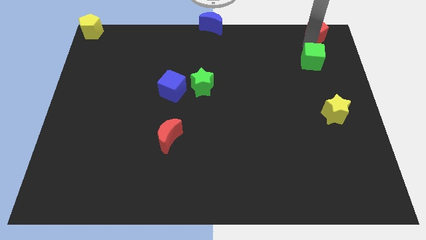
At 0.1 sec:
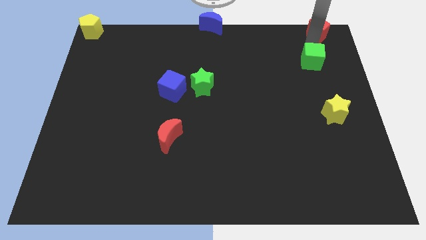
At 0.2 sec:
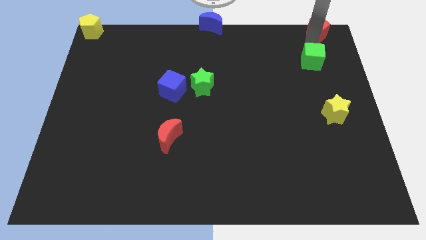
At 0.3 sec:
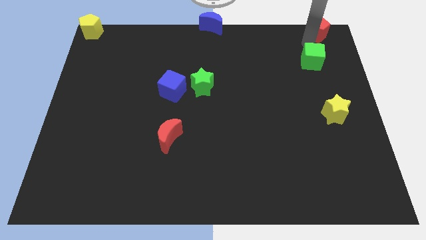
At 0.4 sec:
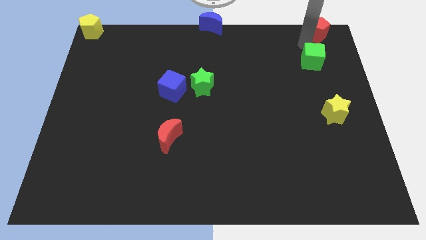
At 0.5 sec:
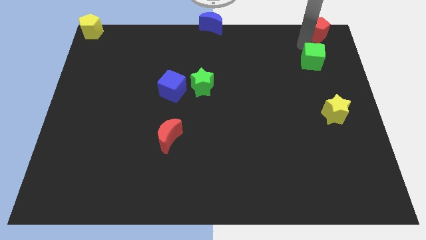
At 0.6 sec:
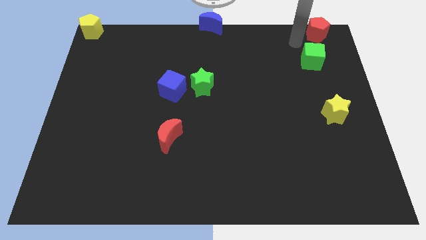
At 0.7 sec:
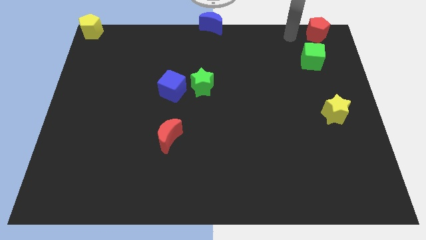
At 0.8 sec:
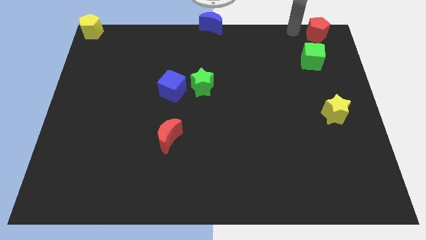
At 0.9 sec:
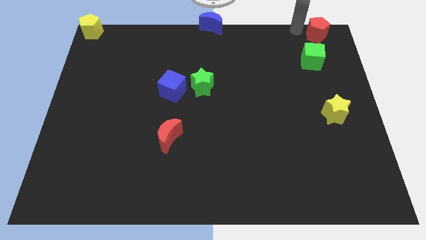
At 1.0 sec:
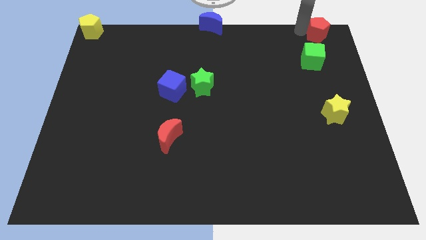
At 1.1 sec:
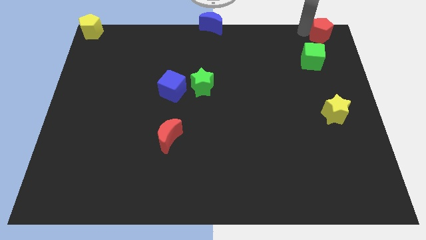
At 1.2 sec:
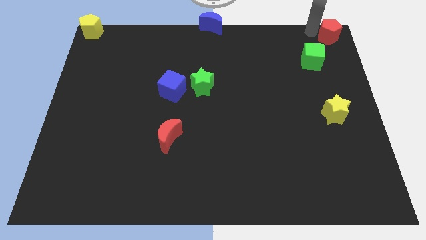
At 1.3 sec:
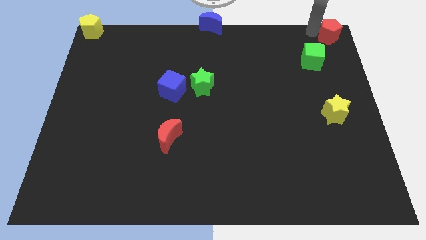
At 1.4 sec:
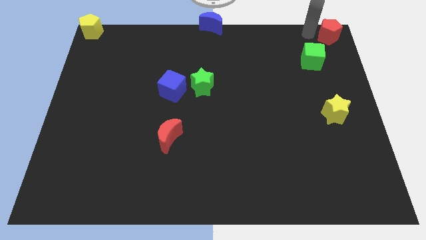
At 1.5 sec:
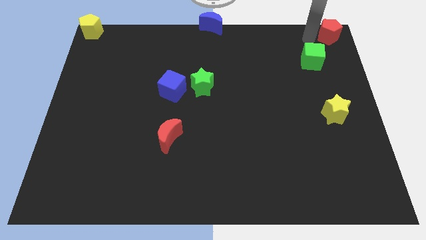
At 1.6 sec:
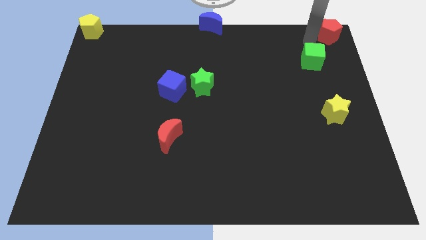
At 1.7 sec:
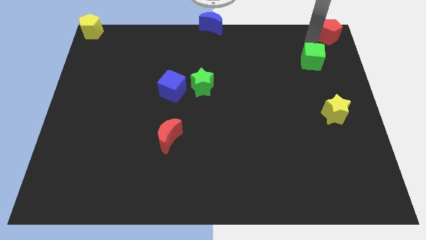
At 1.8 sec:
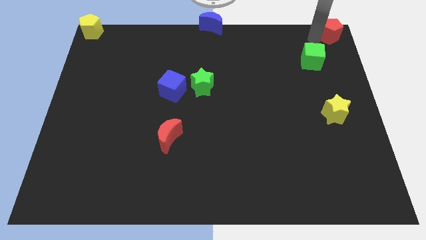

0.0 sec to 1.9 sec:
move the red pentagon to the top right side of the board

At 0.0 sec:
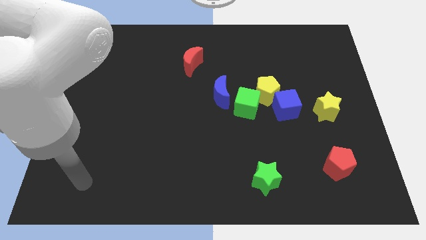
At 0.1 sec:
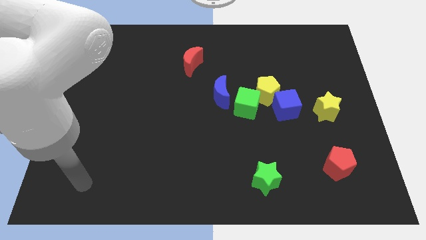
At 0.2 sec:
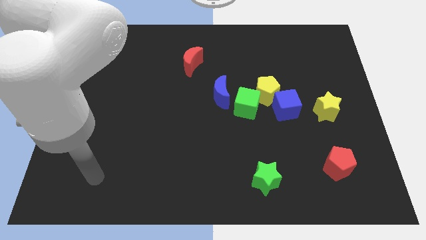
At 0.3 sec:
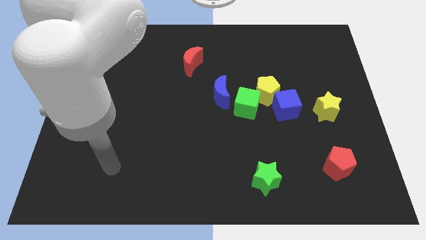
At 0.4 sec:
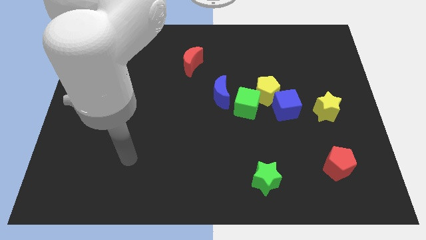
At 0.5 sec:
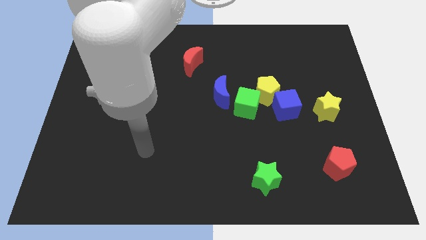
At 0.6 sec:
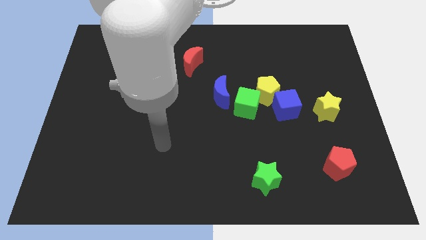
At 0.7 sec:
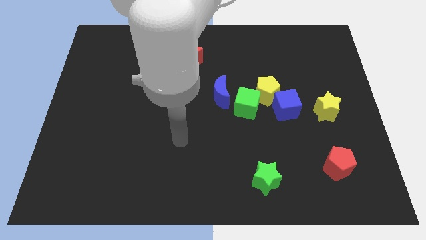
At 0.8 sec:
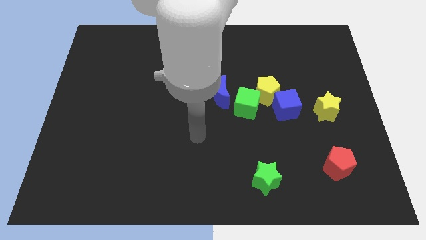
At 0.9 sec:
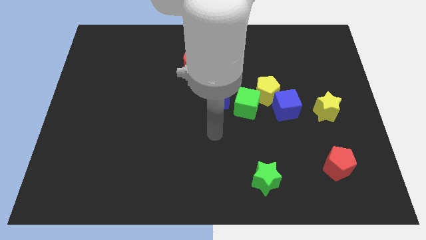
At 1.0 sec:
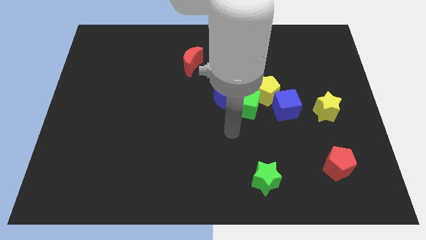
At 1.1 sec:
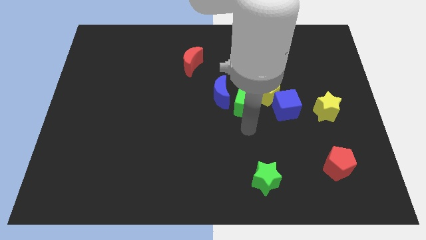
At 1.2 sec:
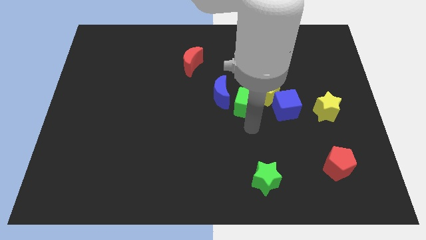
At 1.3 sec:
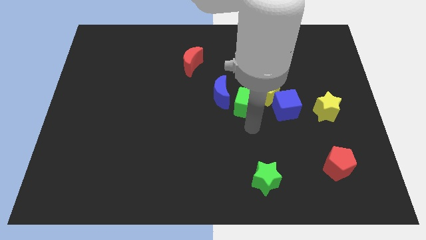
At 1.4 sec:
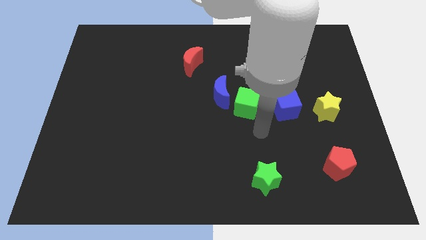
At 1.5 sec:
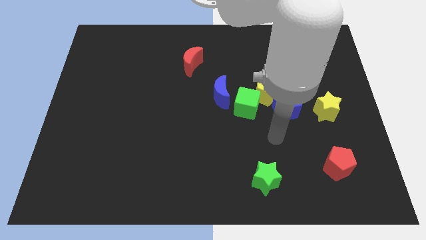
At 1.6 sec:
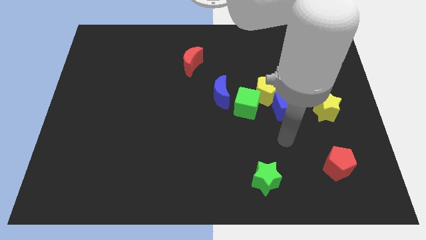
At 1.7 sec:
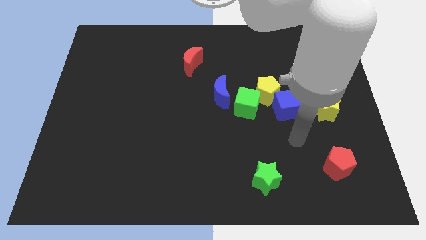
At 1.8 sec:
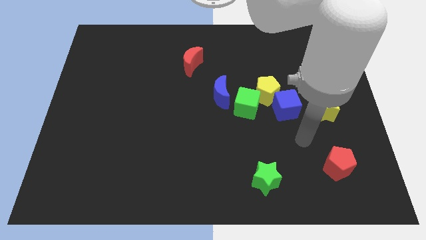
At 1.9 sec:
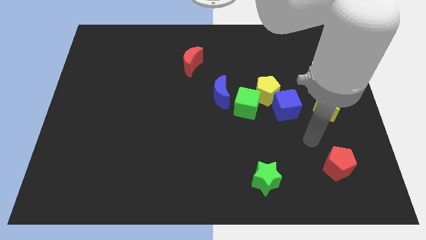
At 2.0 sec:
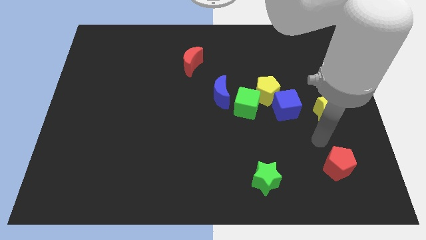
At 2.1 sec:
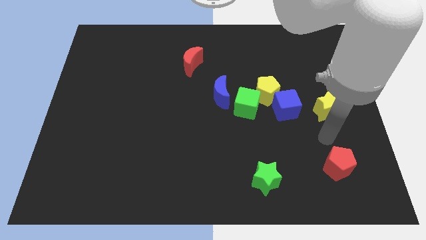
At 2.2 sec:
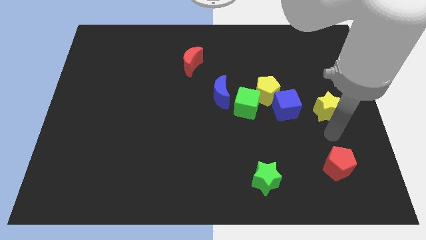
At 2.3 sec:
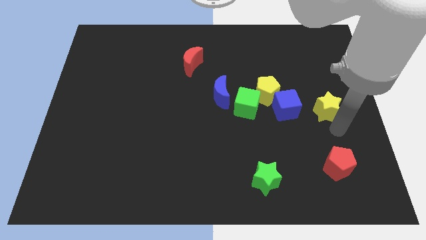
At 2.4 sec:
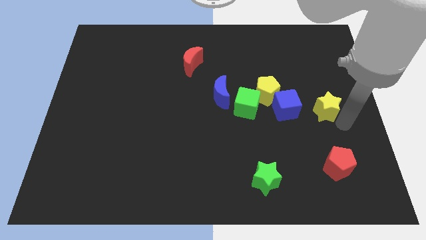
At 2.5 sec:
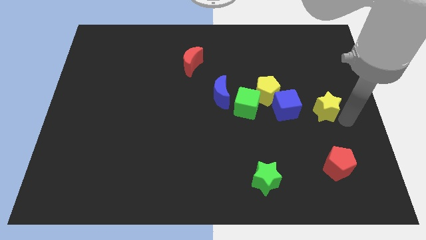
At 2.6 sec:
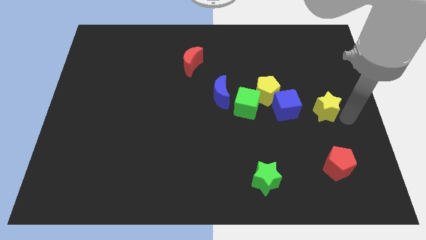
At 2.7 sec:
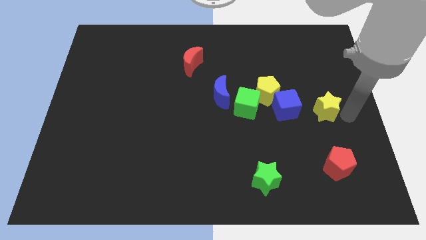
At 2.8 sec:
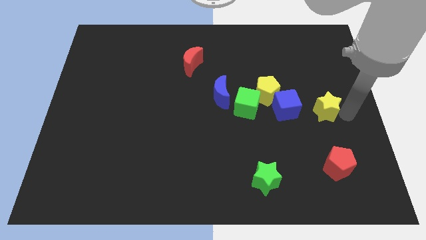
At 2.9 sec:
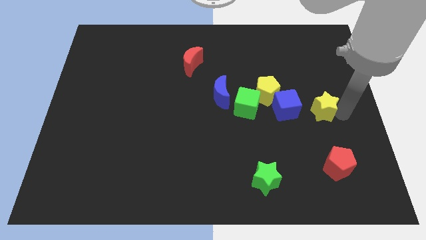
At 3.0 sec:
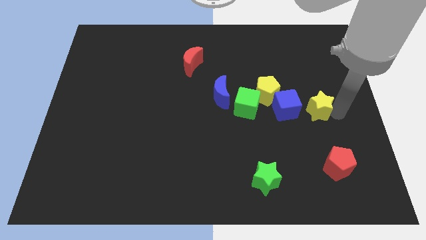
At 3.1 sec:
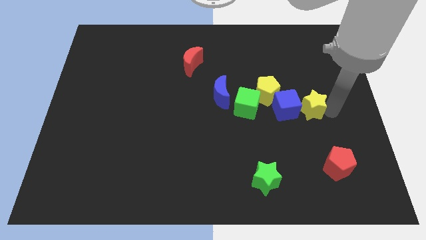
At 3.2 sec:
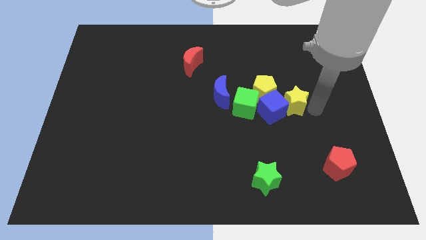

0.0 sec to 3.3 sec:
push the yellow star into the blue cube

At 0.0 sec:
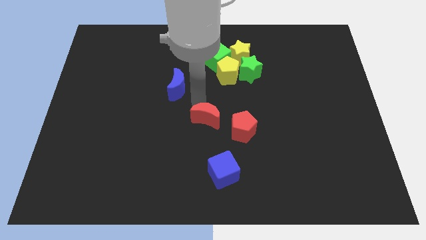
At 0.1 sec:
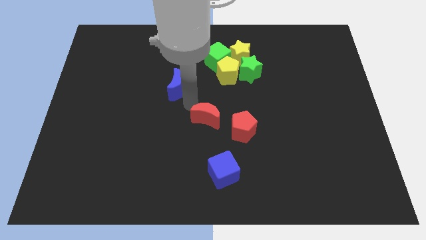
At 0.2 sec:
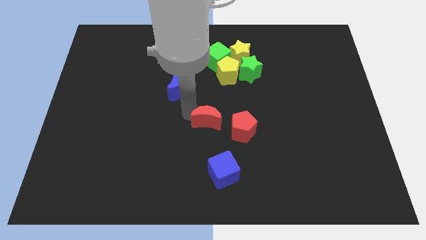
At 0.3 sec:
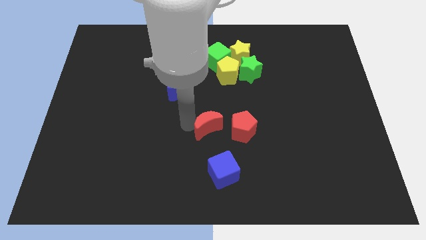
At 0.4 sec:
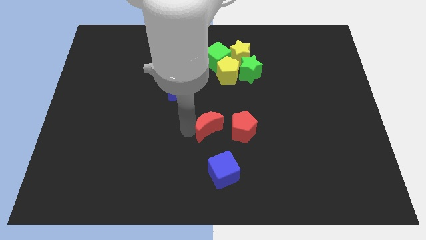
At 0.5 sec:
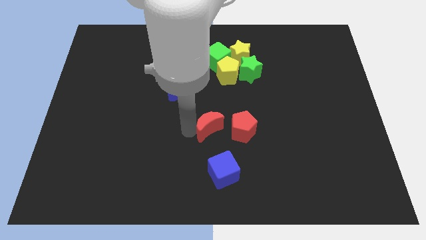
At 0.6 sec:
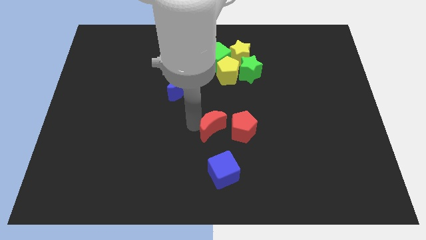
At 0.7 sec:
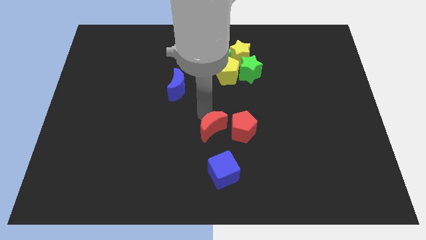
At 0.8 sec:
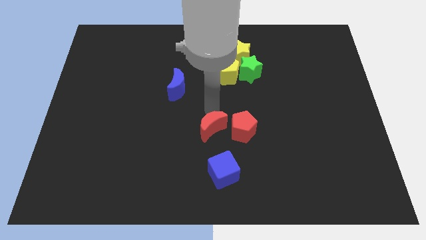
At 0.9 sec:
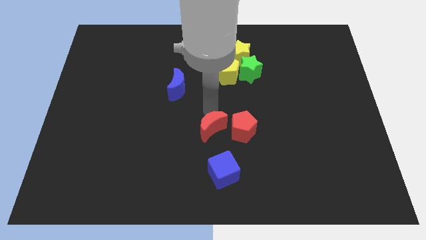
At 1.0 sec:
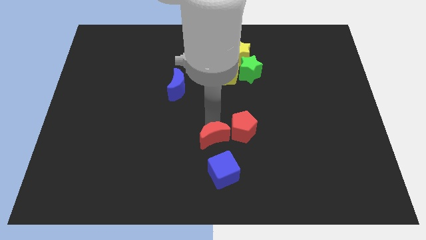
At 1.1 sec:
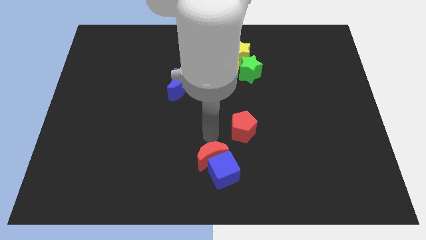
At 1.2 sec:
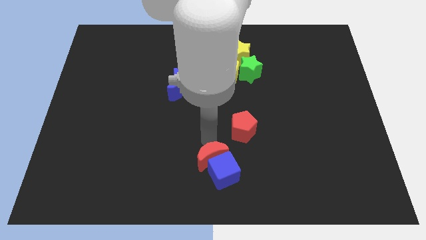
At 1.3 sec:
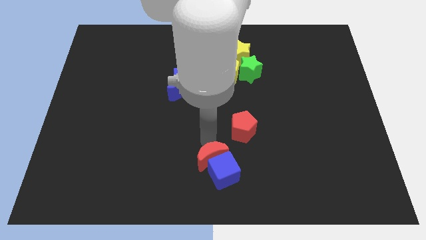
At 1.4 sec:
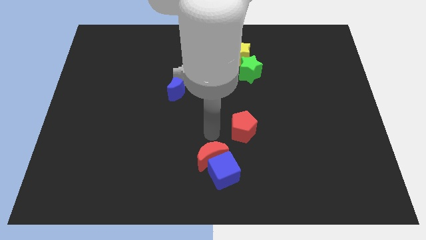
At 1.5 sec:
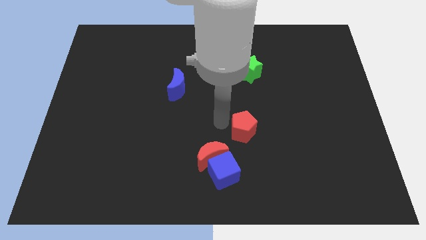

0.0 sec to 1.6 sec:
move the red crescent above the blue cube

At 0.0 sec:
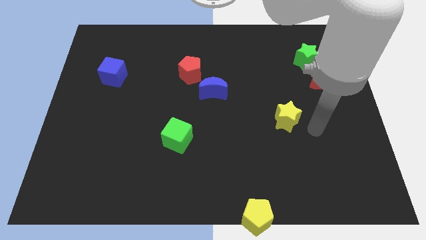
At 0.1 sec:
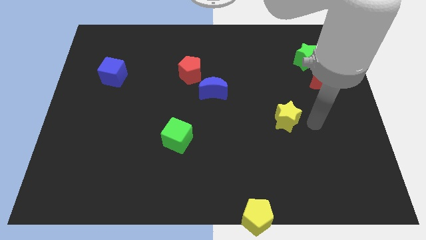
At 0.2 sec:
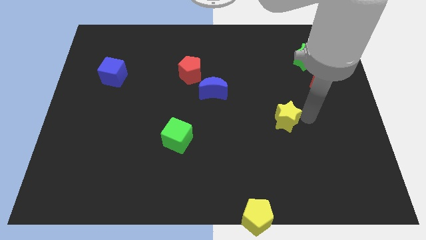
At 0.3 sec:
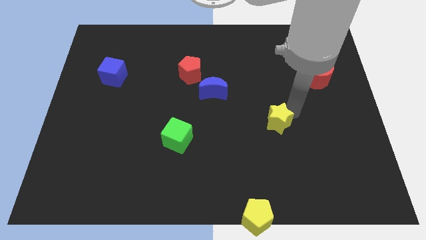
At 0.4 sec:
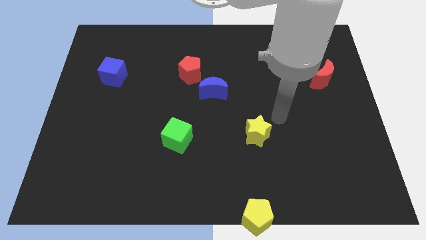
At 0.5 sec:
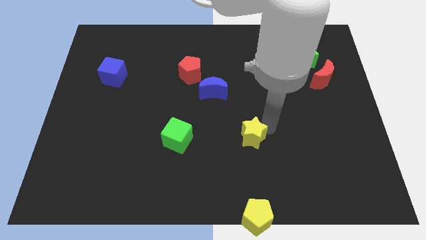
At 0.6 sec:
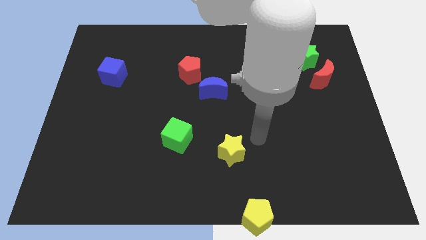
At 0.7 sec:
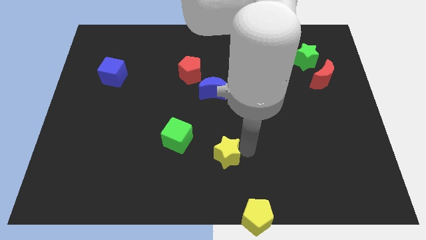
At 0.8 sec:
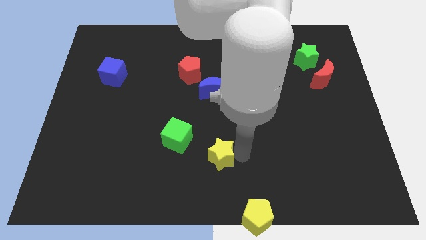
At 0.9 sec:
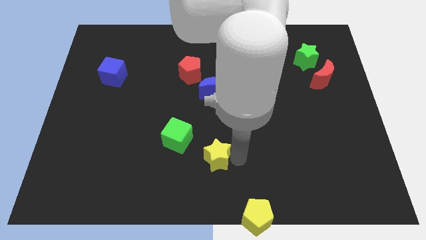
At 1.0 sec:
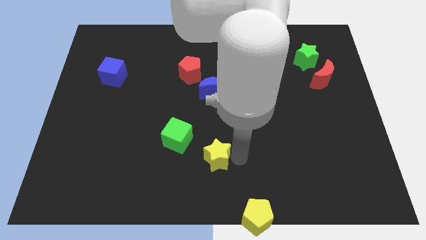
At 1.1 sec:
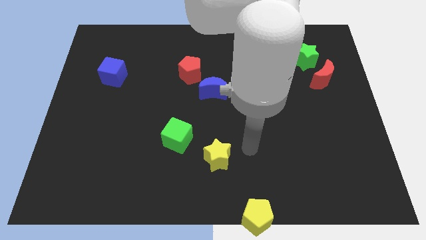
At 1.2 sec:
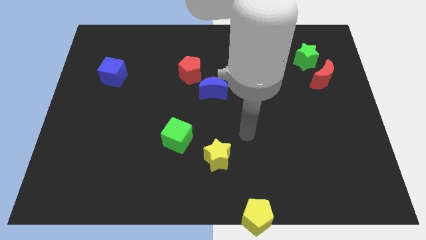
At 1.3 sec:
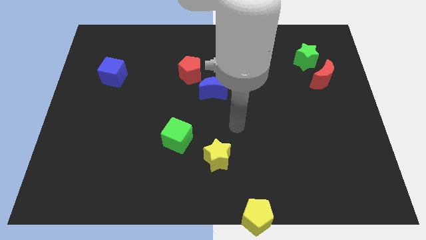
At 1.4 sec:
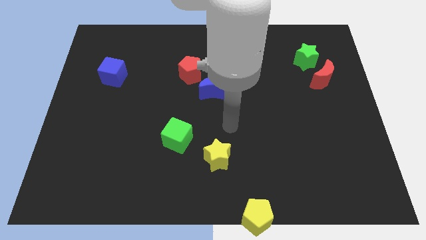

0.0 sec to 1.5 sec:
place yellow star near to the green block

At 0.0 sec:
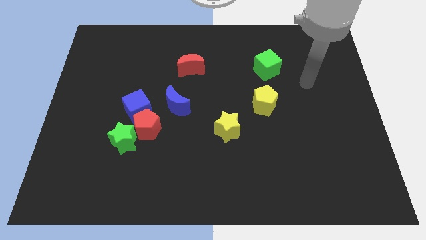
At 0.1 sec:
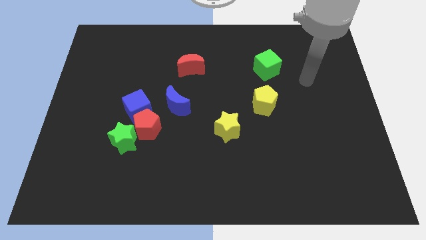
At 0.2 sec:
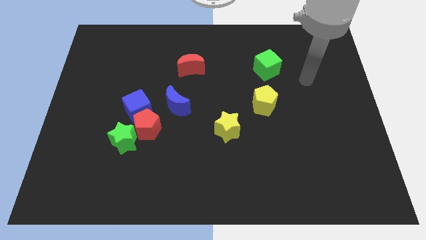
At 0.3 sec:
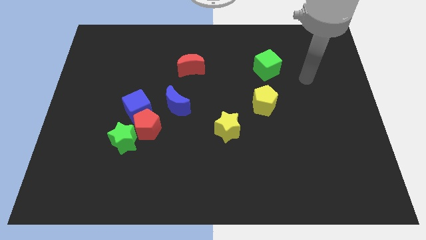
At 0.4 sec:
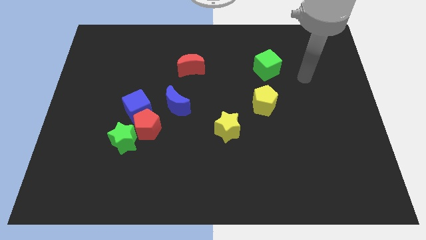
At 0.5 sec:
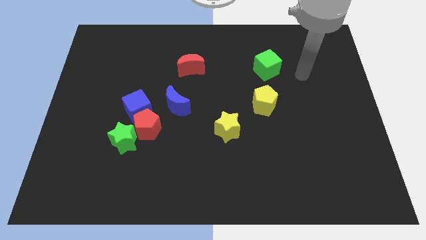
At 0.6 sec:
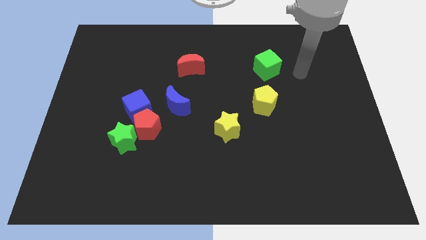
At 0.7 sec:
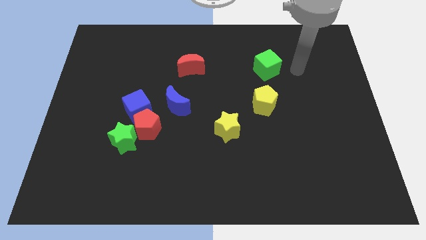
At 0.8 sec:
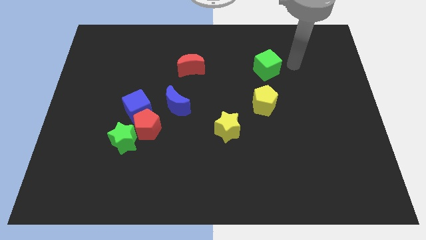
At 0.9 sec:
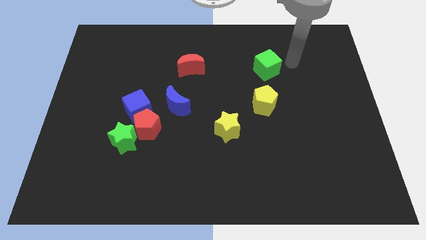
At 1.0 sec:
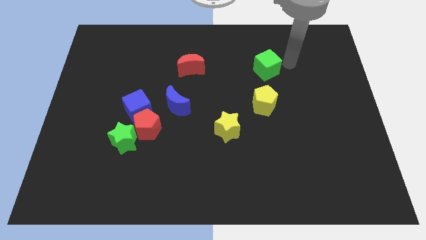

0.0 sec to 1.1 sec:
move your arm to the top right of the green cube
